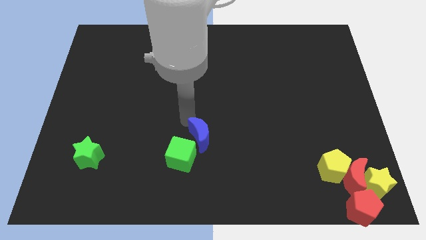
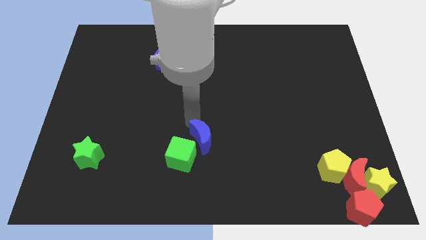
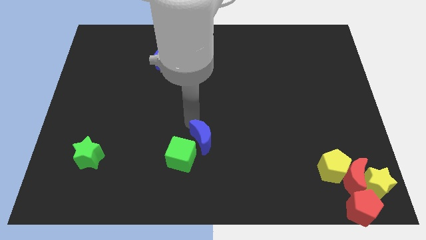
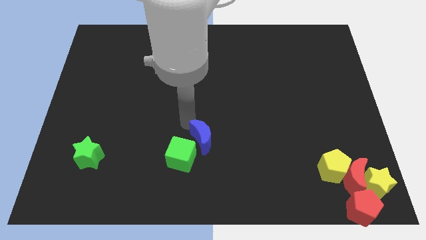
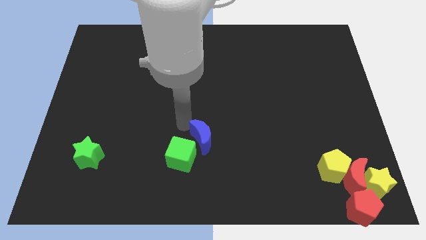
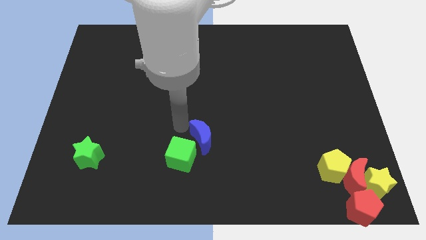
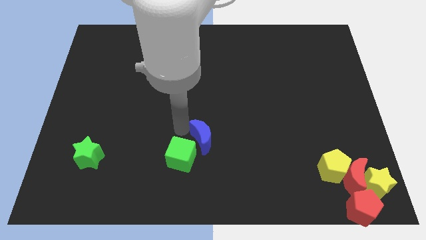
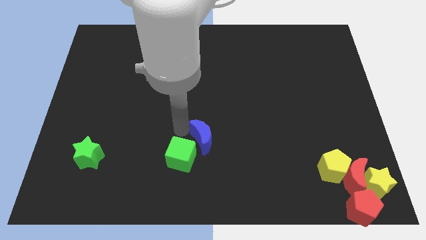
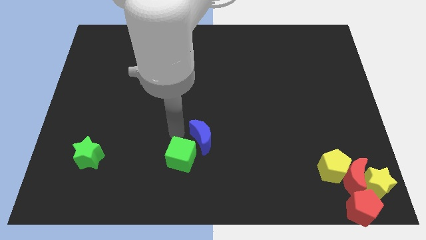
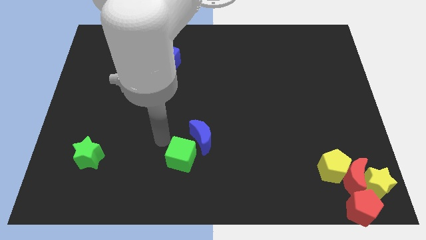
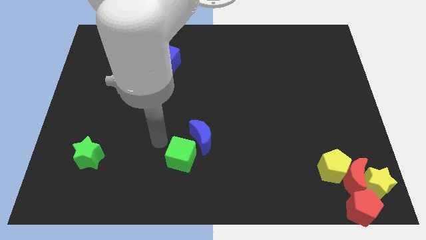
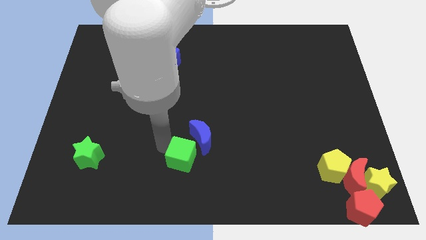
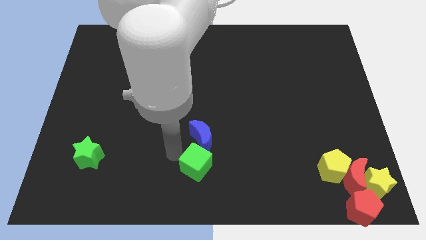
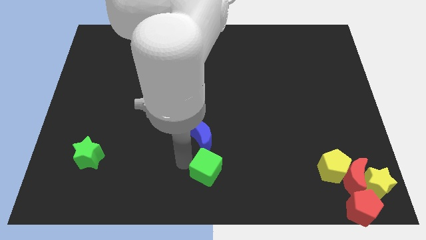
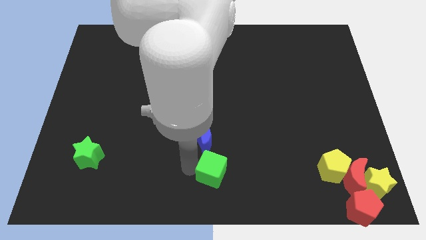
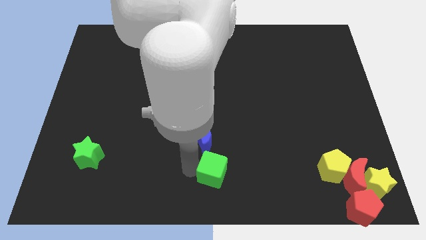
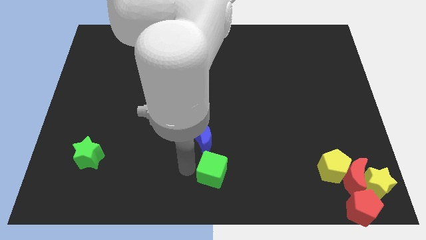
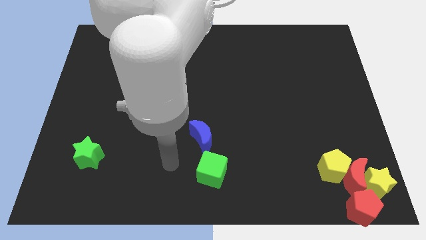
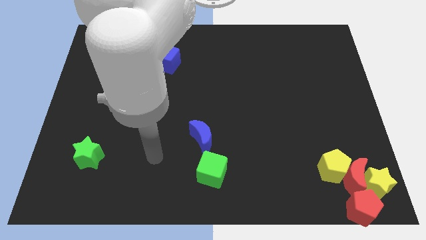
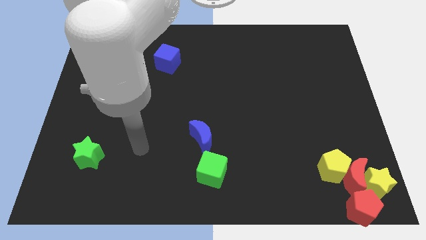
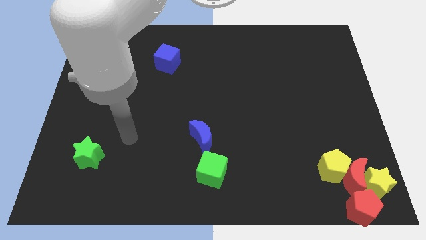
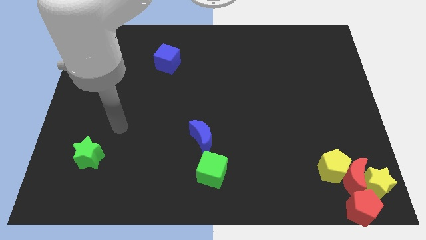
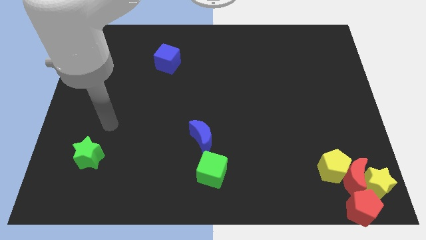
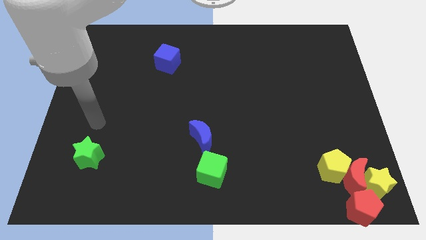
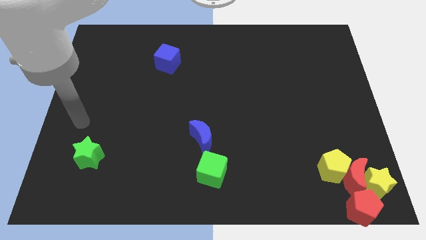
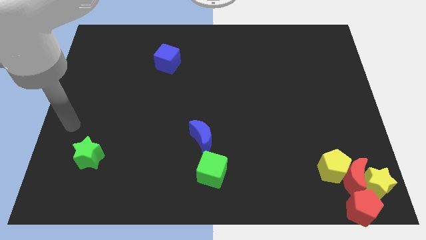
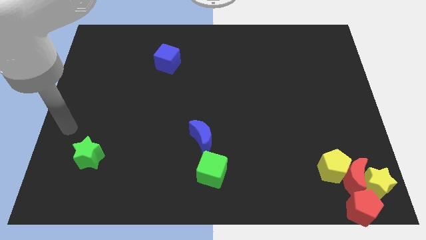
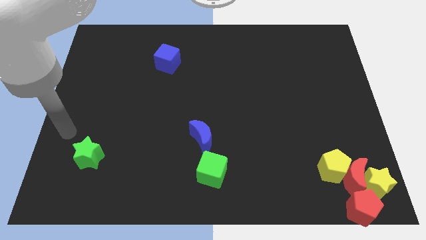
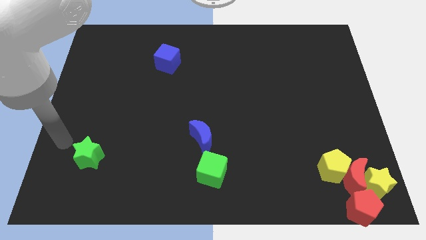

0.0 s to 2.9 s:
drag green cube below blue moon

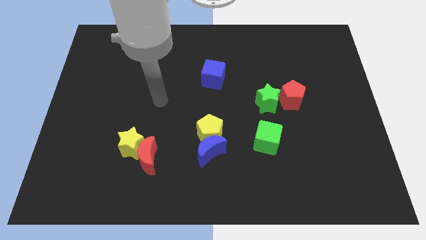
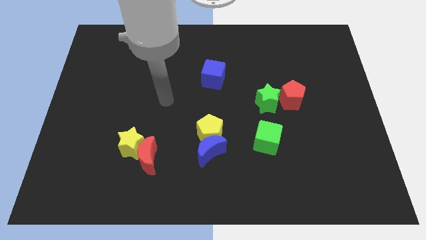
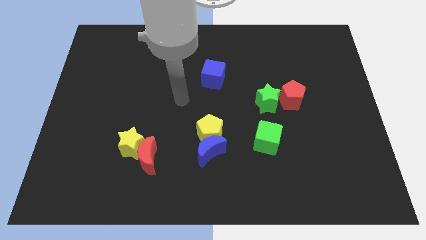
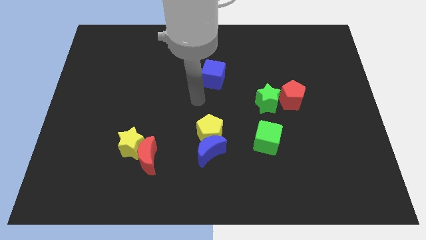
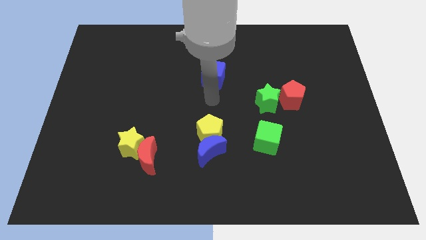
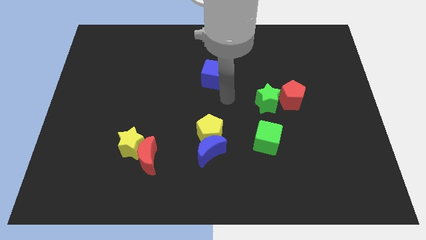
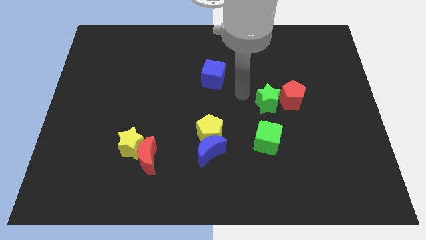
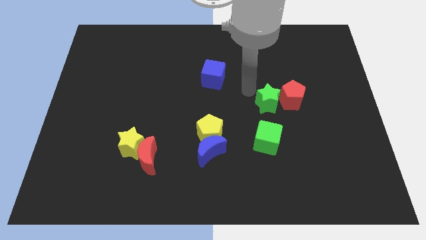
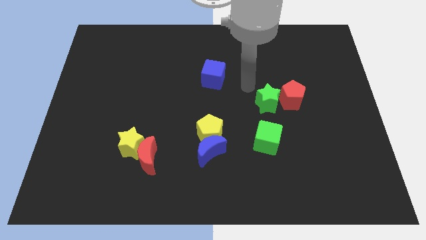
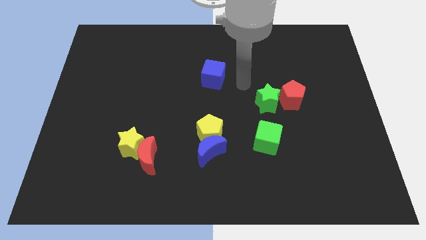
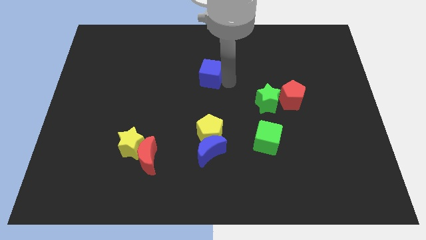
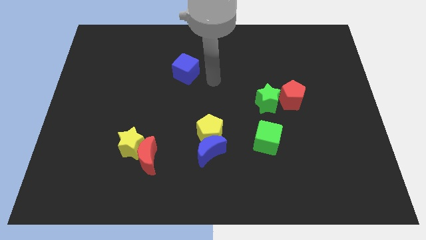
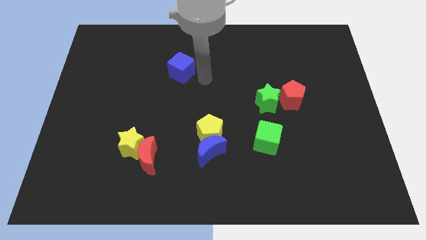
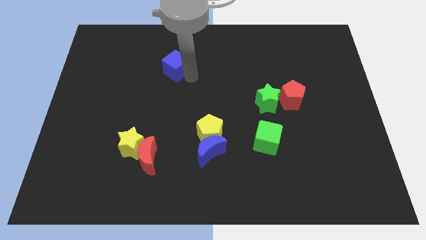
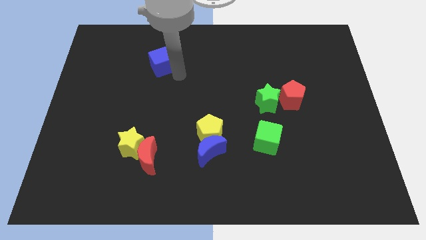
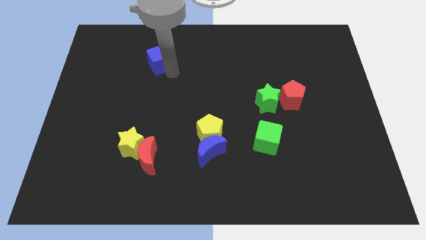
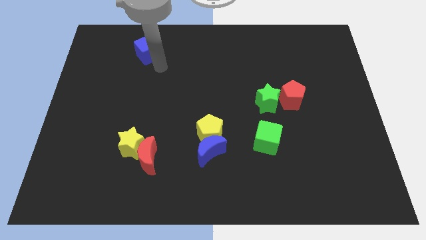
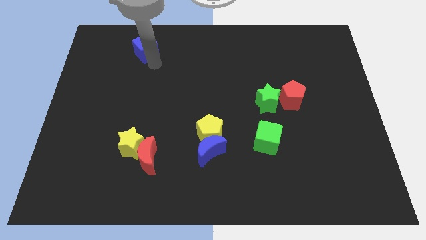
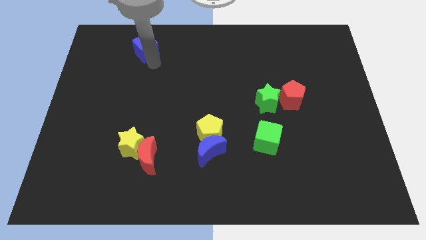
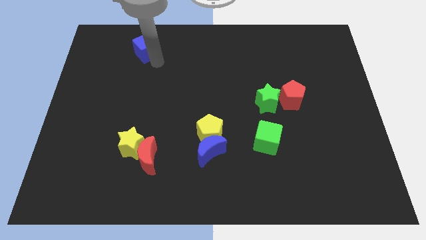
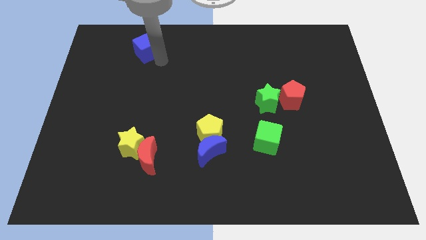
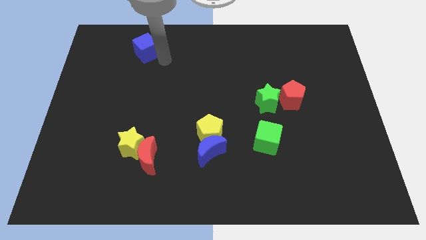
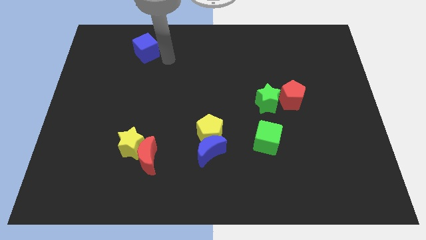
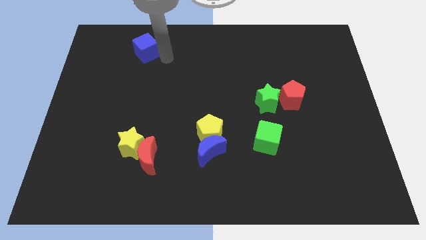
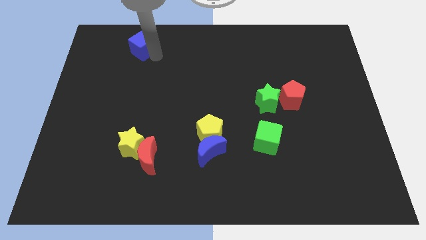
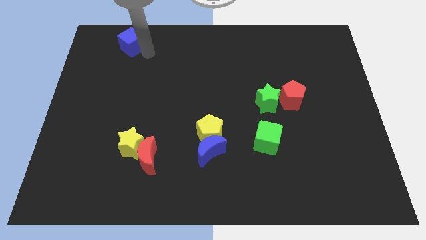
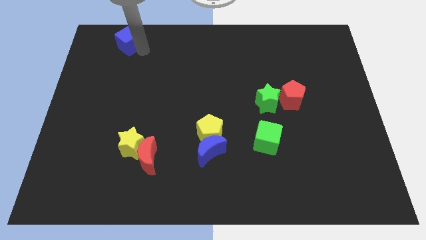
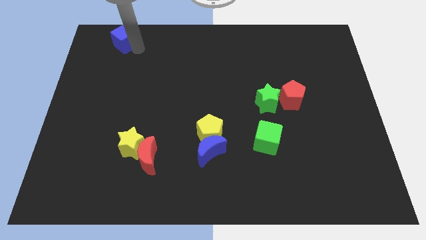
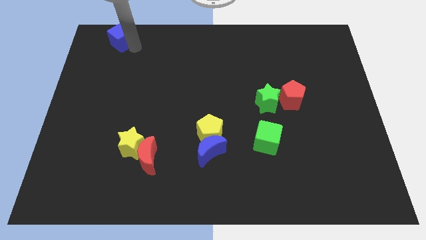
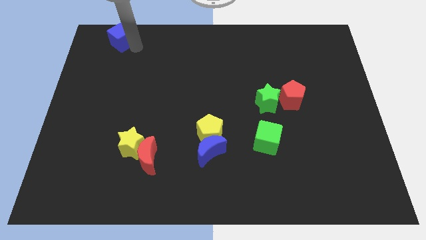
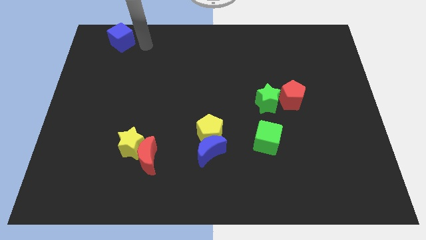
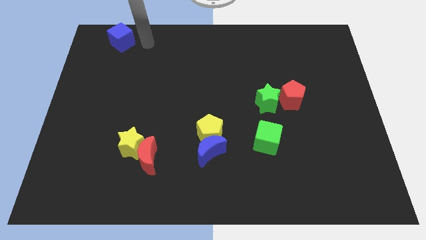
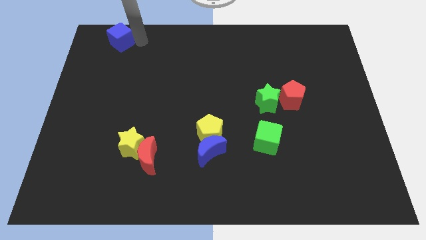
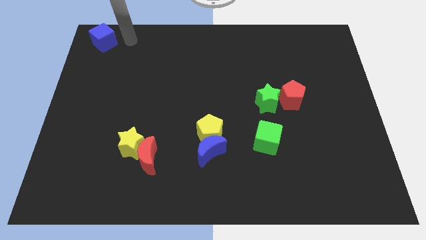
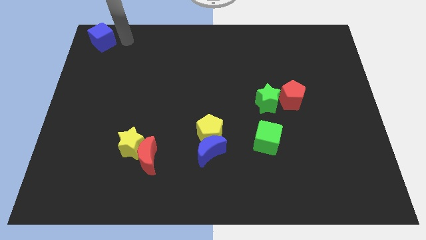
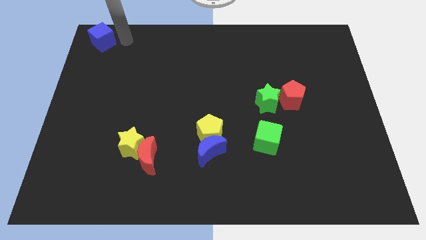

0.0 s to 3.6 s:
move blue cube to the left top of the board

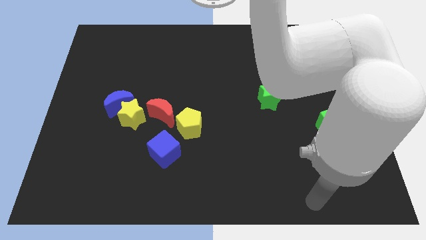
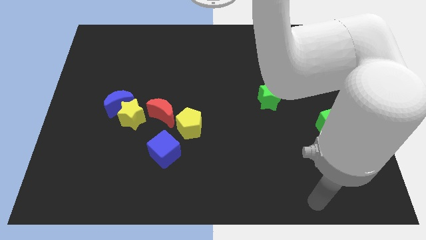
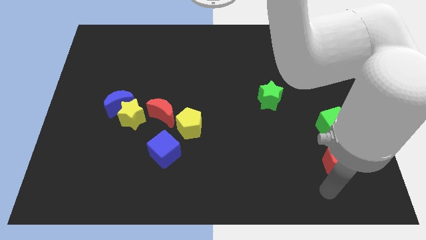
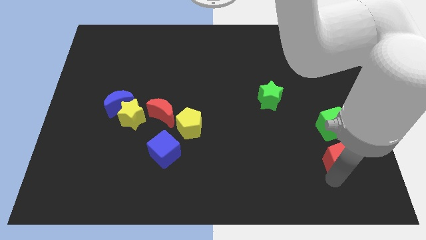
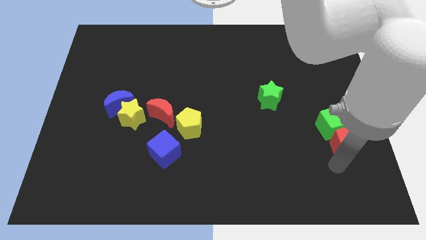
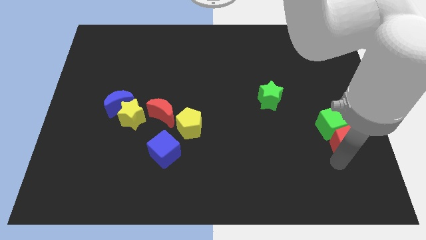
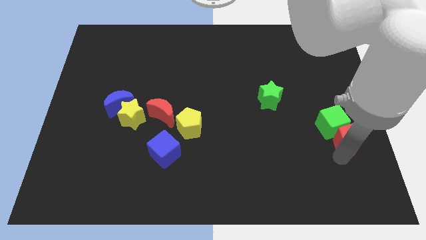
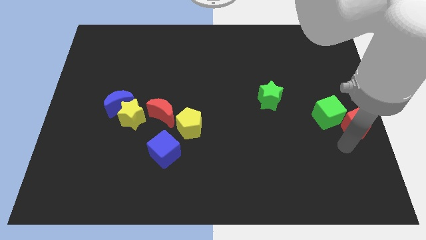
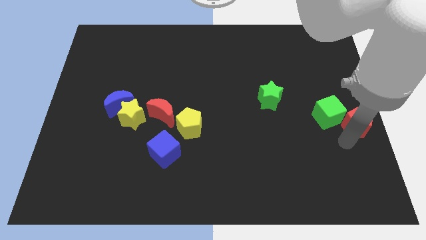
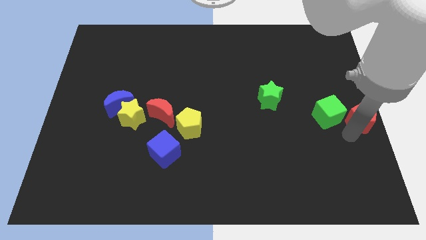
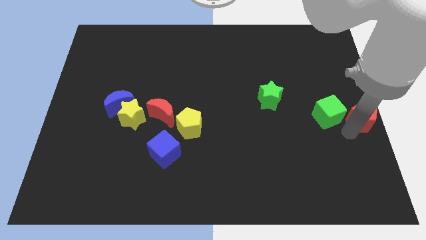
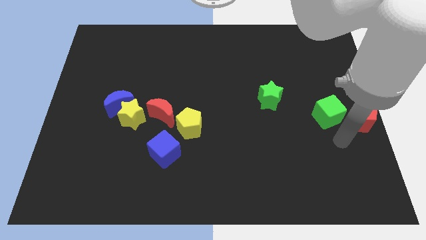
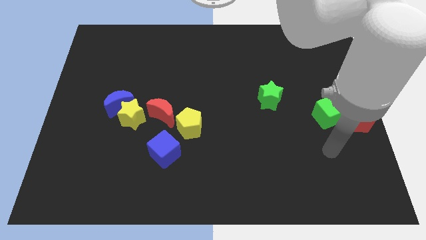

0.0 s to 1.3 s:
place the red pentagon right to the green cube

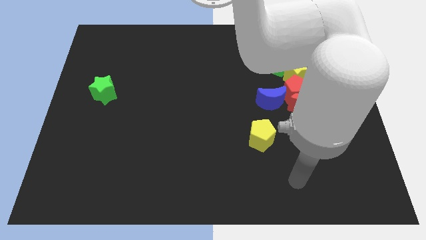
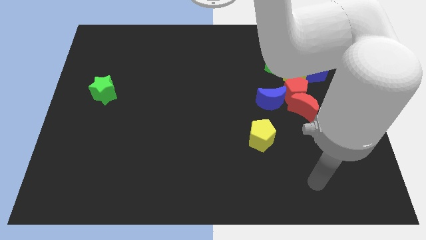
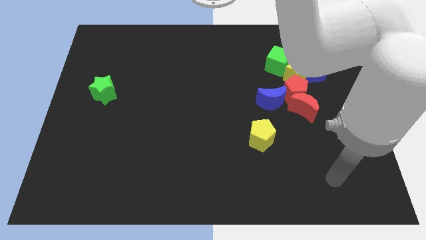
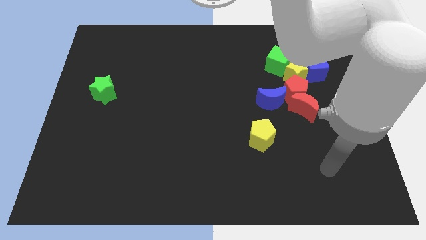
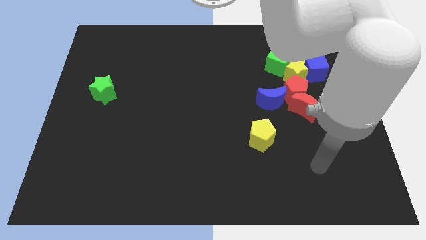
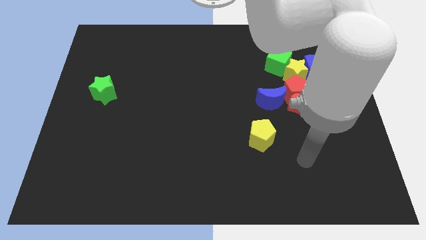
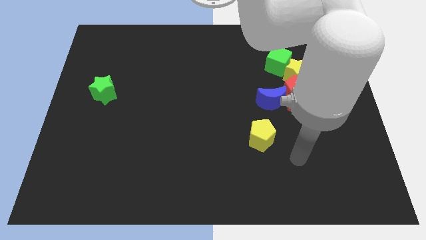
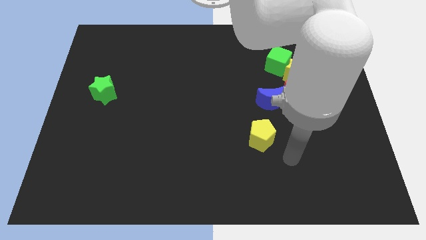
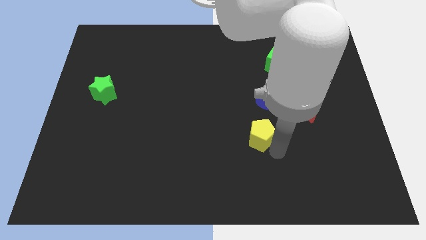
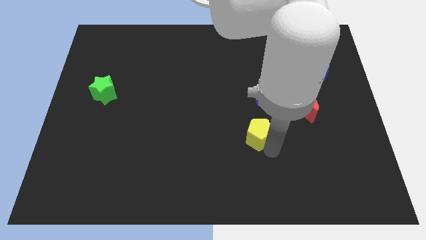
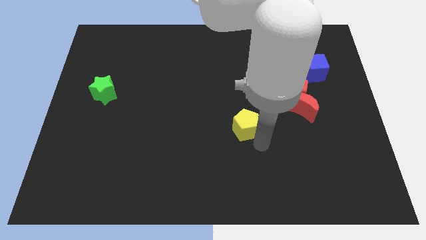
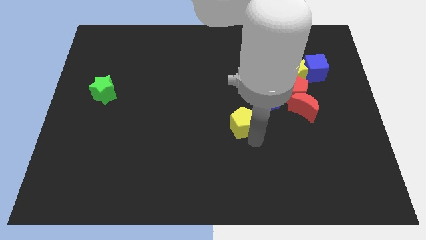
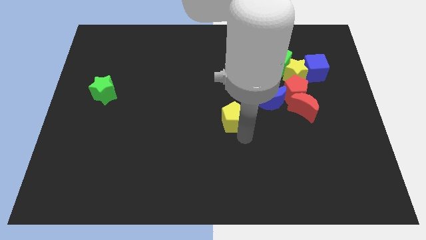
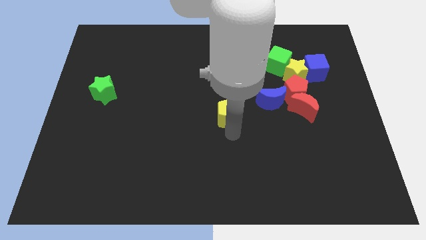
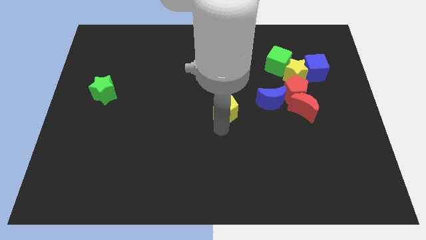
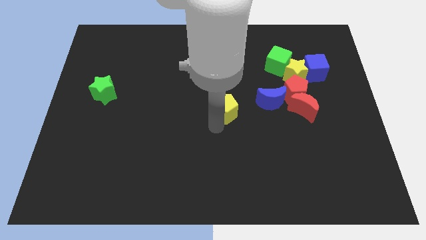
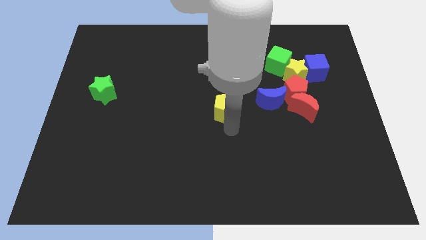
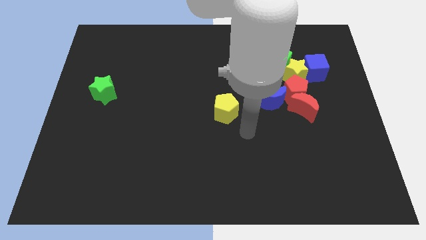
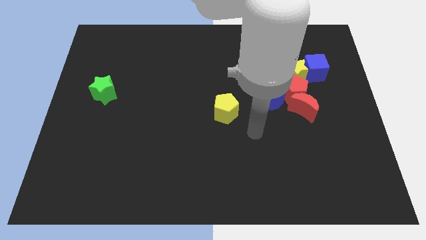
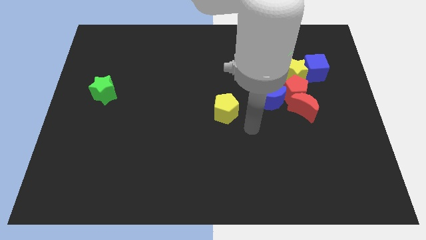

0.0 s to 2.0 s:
slide the yellow pentagon to the center of the board
